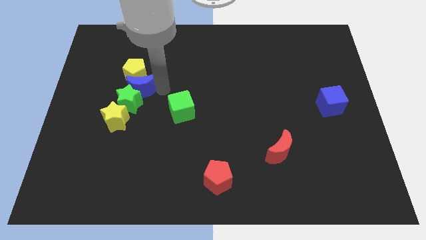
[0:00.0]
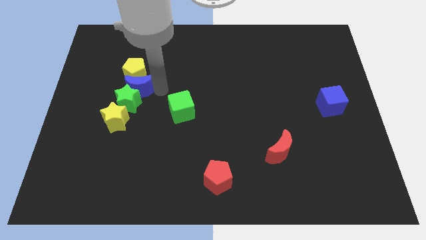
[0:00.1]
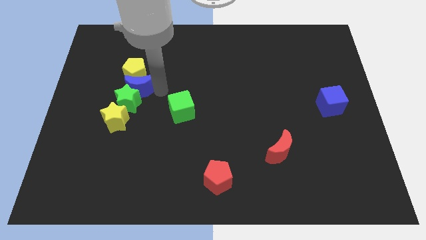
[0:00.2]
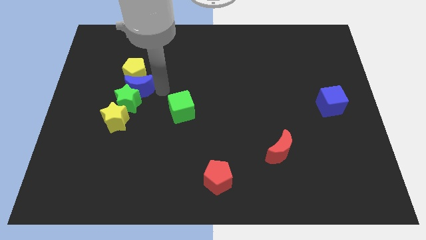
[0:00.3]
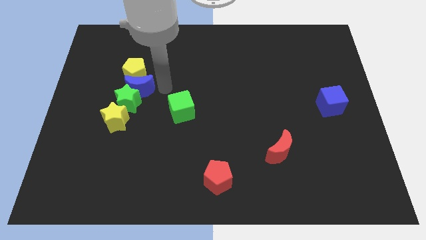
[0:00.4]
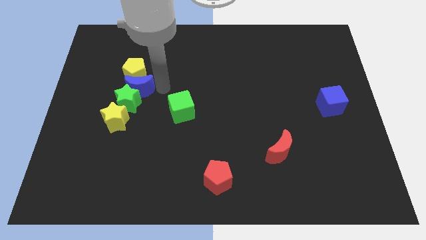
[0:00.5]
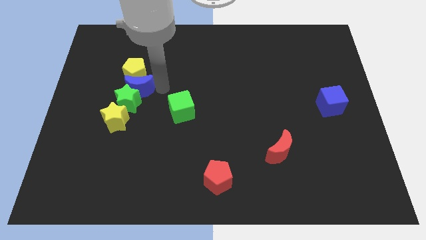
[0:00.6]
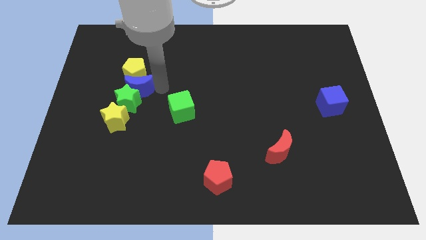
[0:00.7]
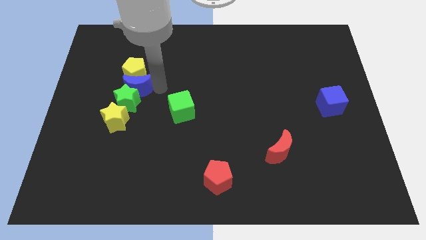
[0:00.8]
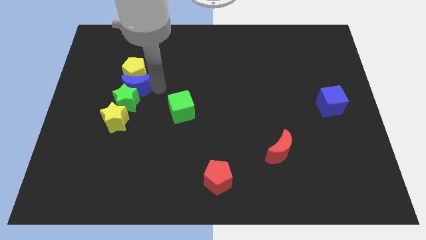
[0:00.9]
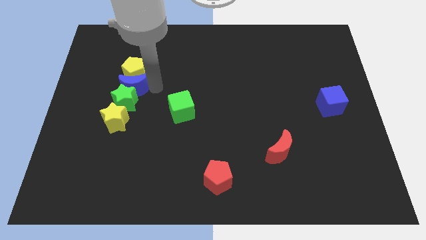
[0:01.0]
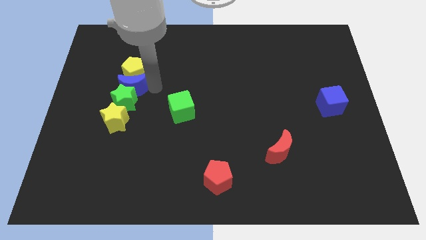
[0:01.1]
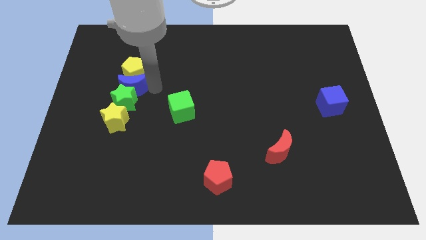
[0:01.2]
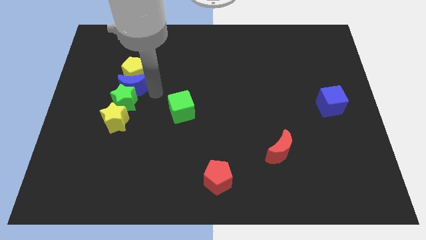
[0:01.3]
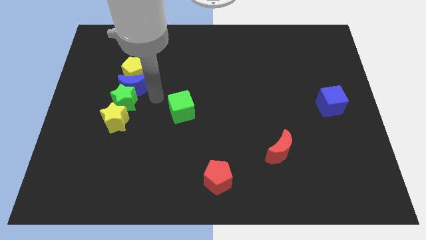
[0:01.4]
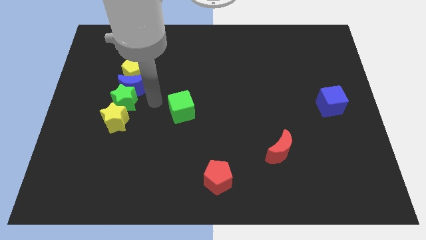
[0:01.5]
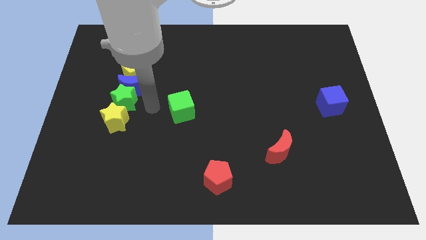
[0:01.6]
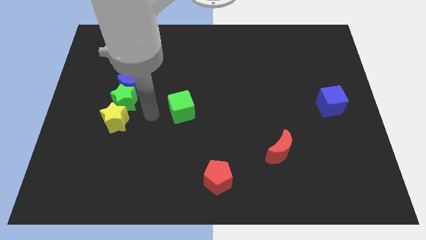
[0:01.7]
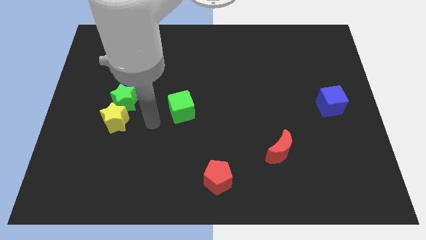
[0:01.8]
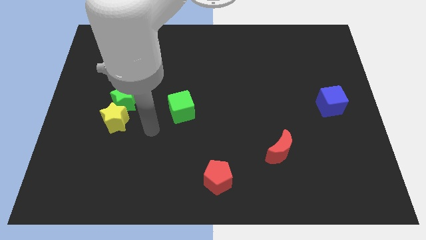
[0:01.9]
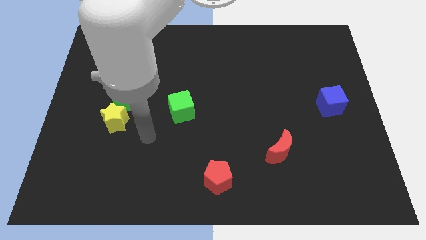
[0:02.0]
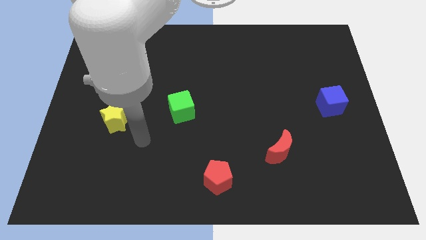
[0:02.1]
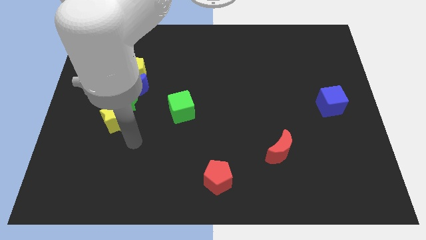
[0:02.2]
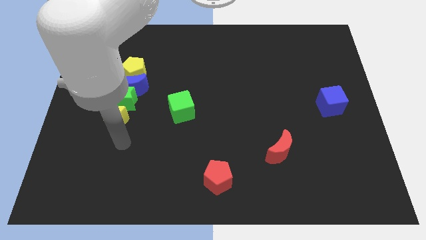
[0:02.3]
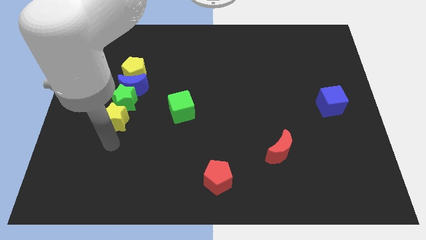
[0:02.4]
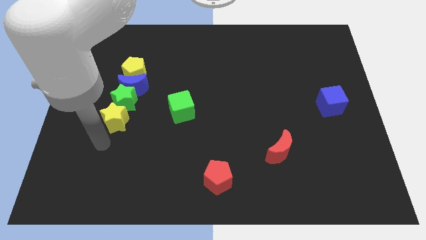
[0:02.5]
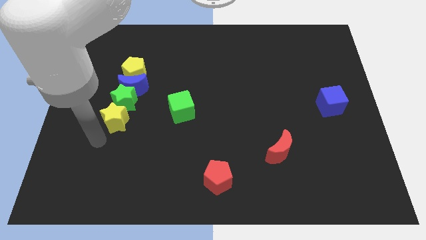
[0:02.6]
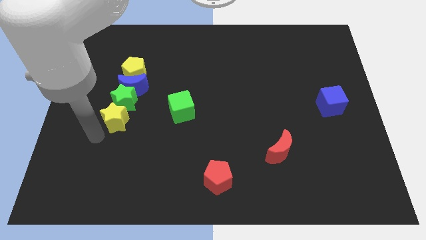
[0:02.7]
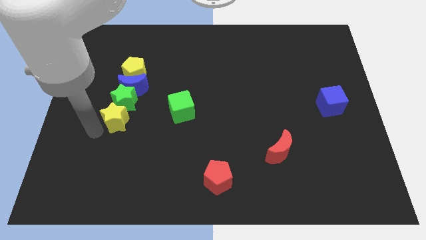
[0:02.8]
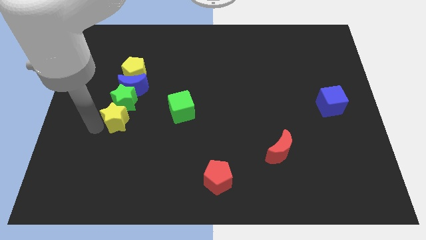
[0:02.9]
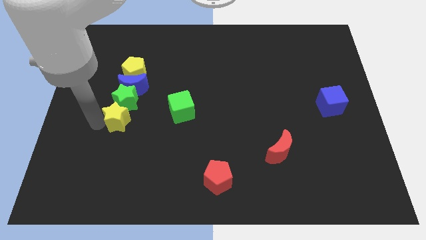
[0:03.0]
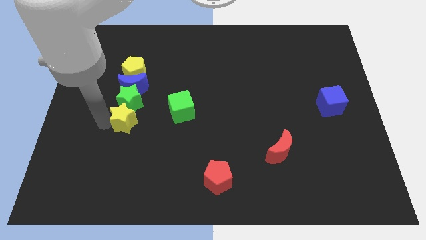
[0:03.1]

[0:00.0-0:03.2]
push the blue moon in between the yellow pentagon and green star

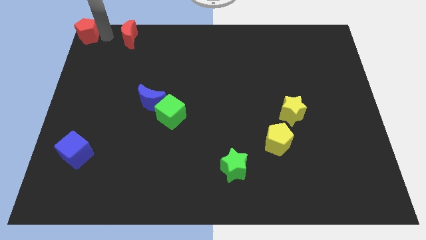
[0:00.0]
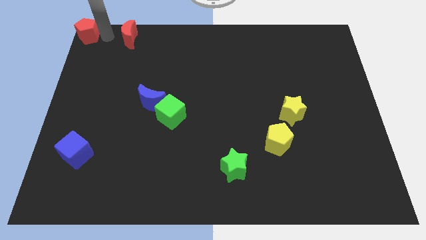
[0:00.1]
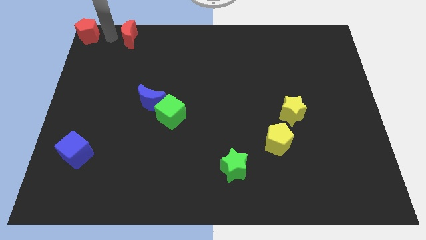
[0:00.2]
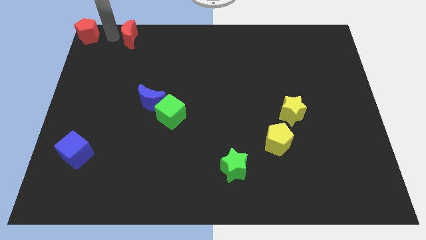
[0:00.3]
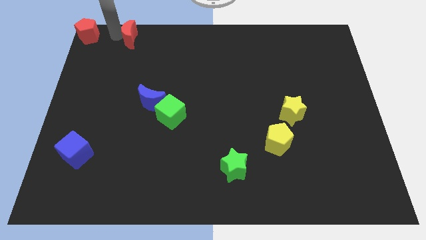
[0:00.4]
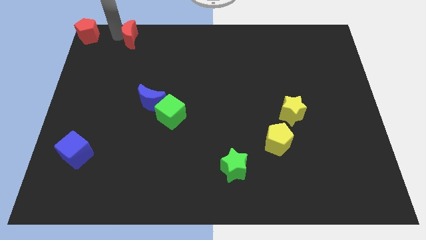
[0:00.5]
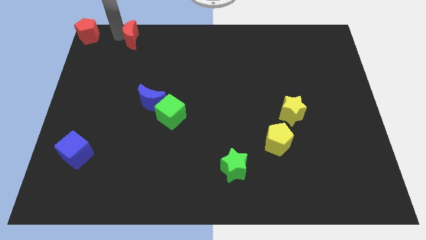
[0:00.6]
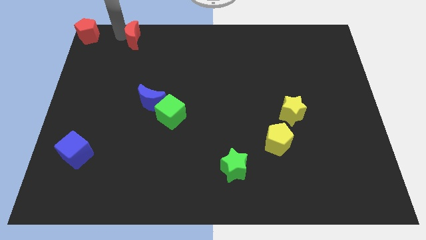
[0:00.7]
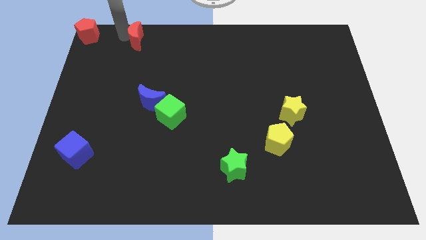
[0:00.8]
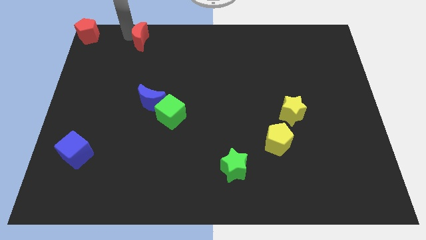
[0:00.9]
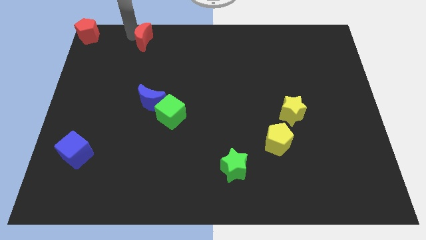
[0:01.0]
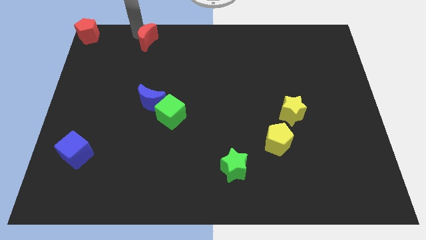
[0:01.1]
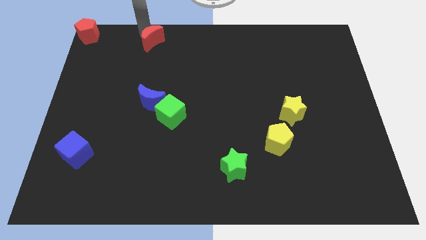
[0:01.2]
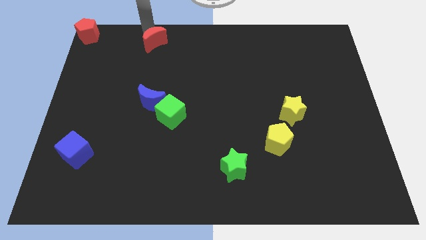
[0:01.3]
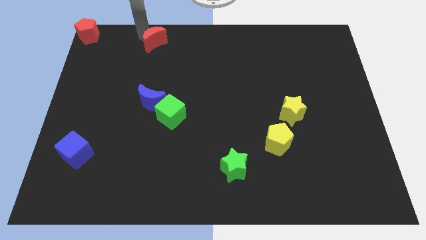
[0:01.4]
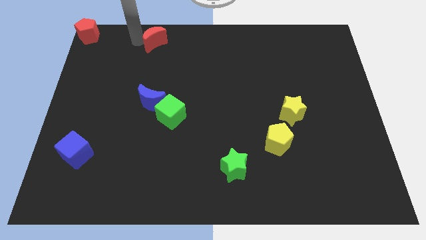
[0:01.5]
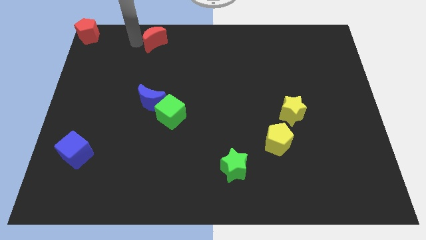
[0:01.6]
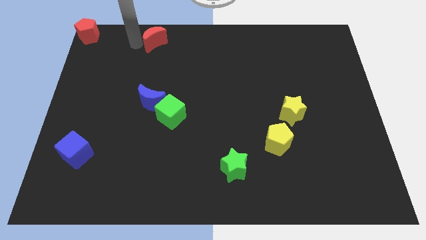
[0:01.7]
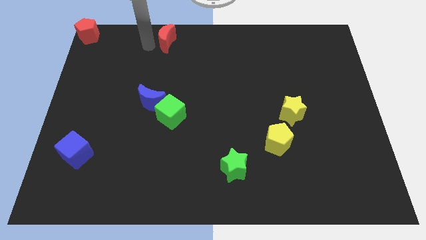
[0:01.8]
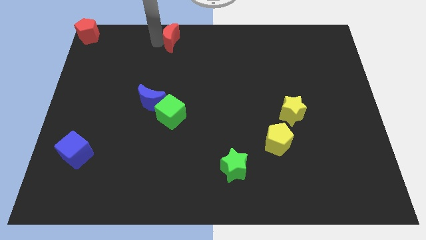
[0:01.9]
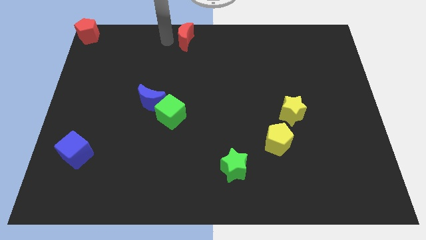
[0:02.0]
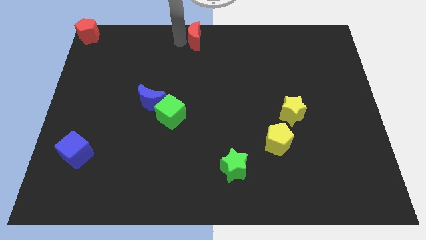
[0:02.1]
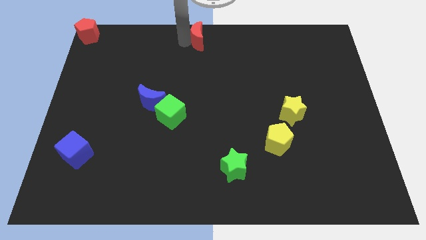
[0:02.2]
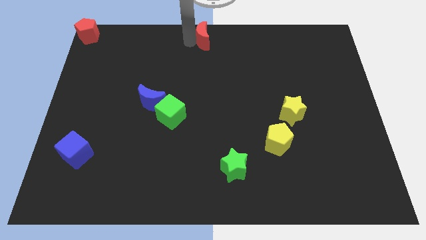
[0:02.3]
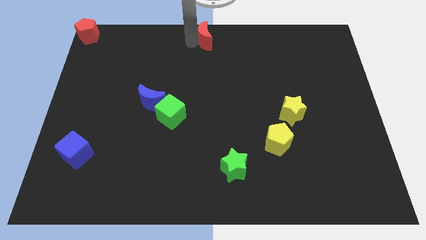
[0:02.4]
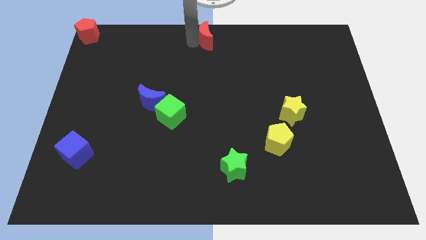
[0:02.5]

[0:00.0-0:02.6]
place the red crescent at the top center of the board

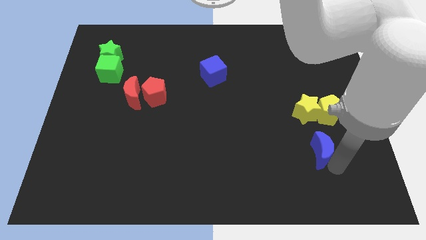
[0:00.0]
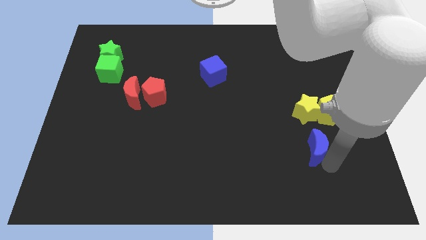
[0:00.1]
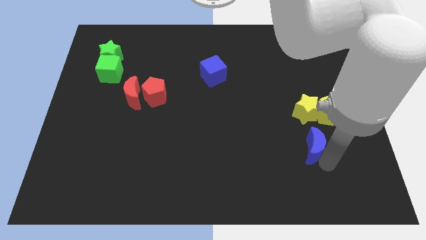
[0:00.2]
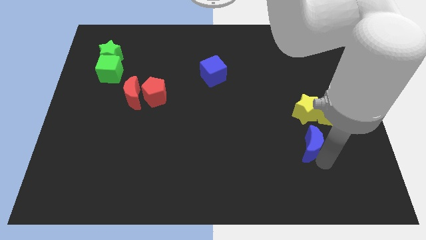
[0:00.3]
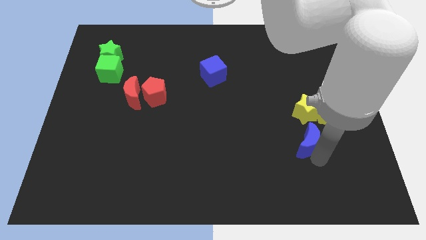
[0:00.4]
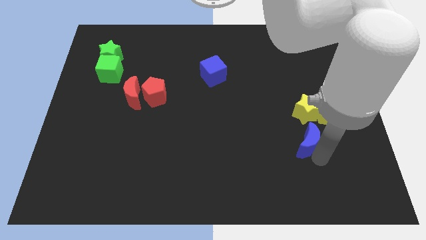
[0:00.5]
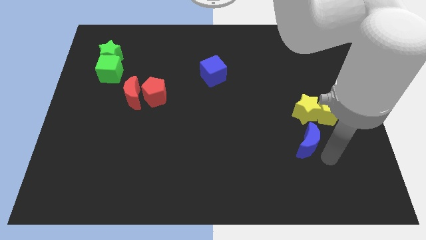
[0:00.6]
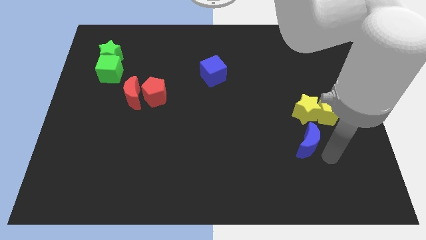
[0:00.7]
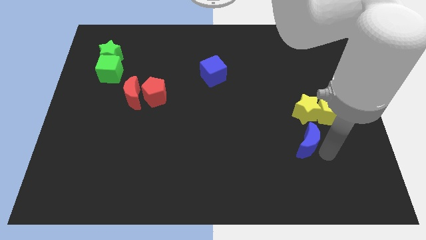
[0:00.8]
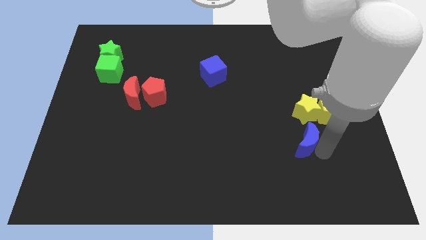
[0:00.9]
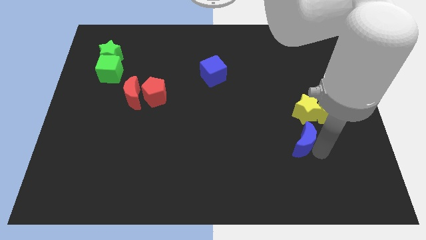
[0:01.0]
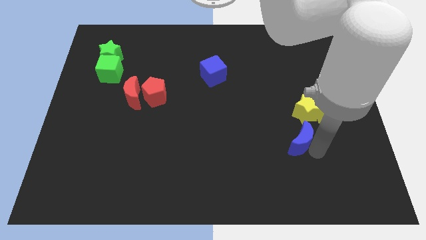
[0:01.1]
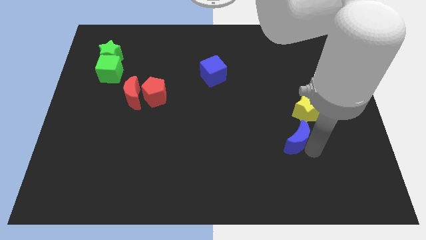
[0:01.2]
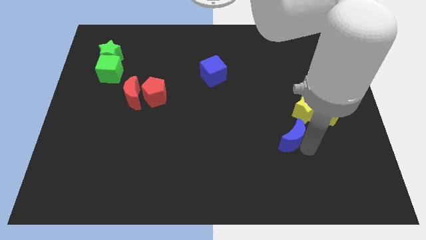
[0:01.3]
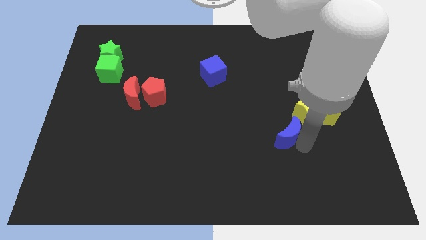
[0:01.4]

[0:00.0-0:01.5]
slide the blue moon to the bottom left of the yellow star

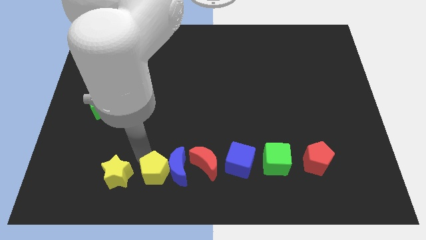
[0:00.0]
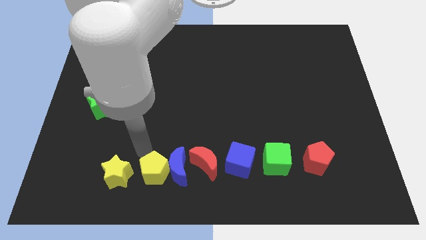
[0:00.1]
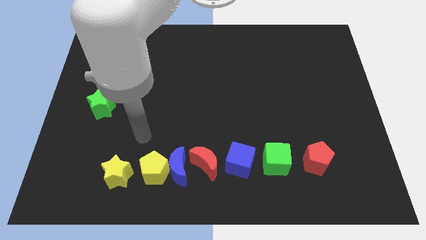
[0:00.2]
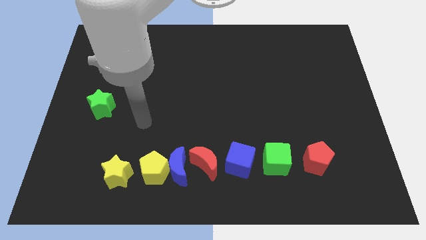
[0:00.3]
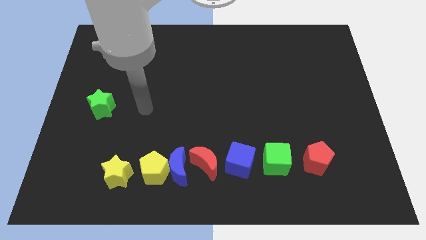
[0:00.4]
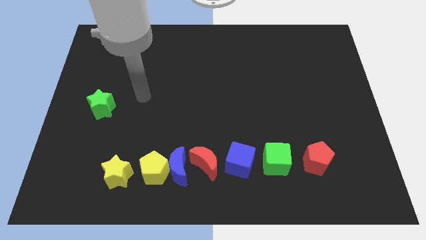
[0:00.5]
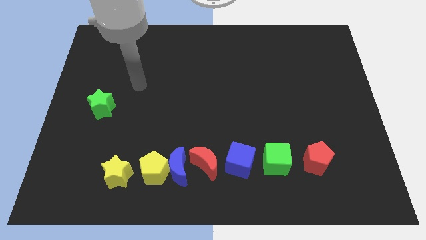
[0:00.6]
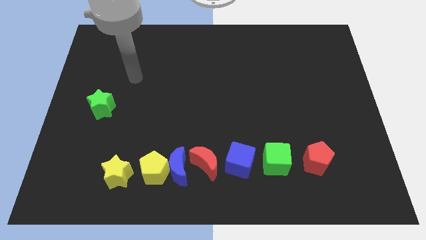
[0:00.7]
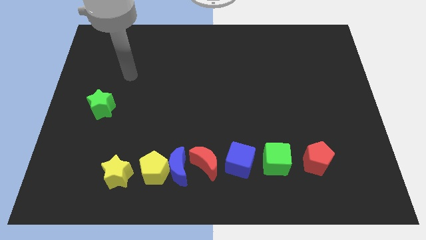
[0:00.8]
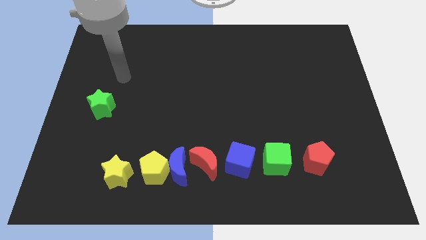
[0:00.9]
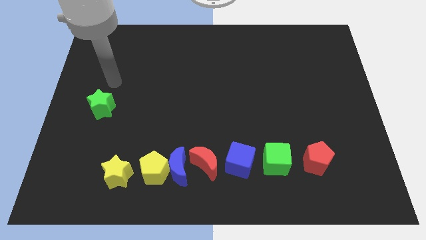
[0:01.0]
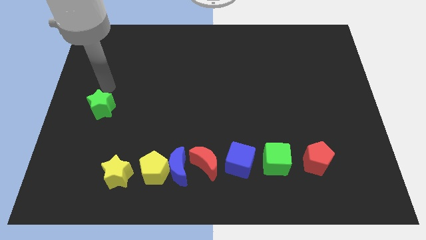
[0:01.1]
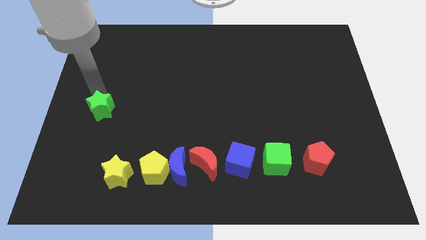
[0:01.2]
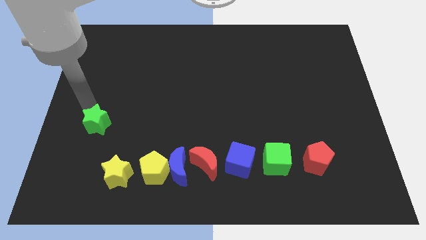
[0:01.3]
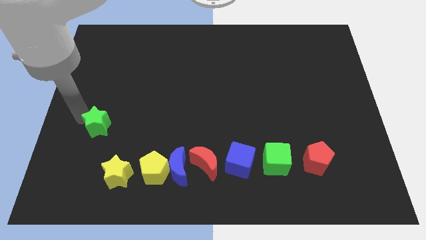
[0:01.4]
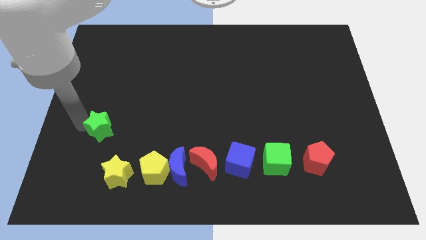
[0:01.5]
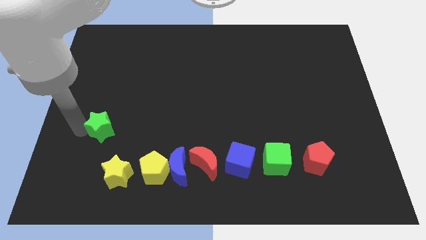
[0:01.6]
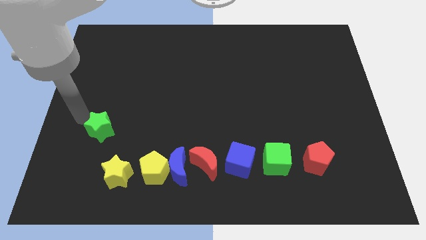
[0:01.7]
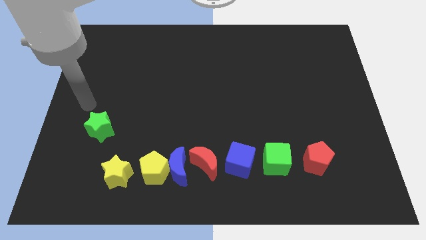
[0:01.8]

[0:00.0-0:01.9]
move the green star at the top of the yellow star slightly towards the bottom
